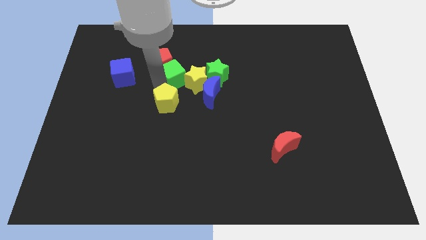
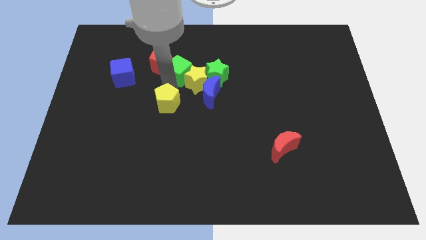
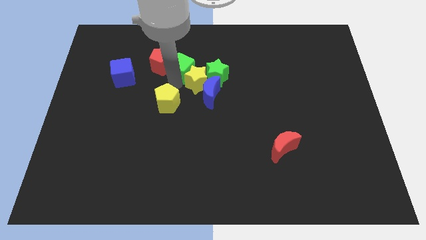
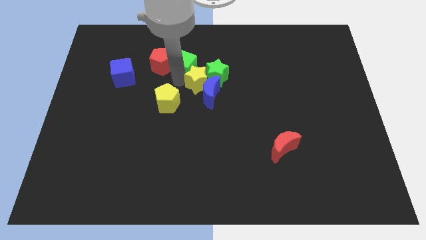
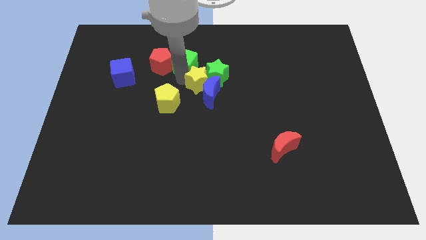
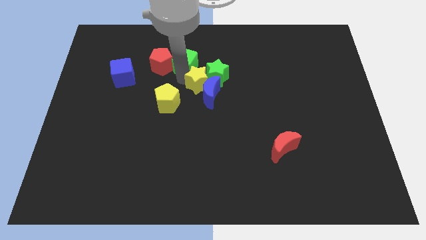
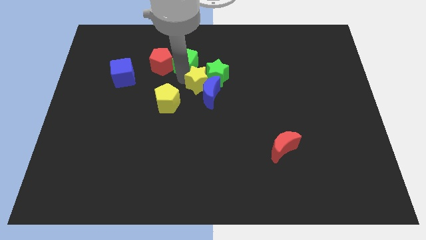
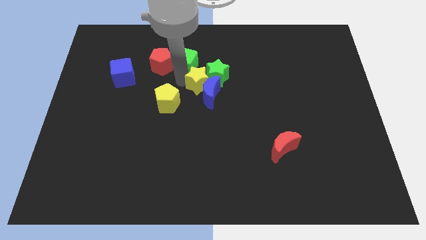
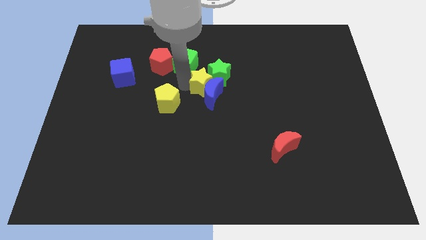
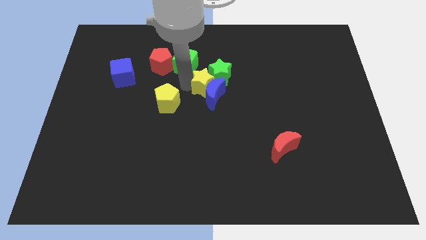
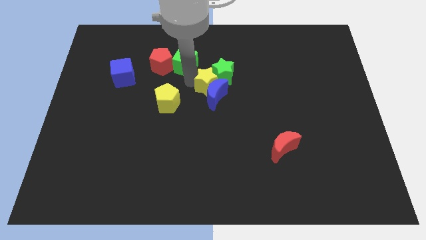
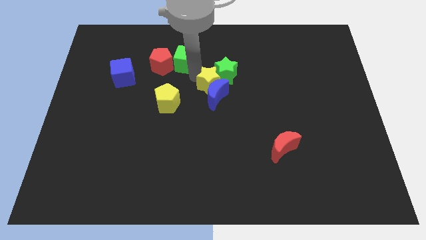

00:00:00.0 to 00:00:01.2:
place the green cube to the right of the red pentagon

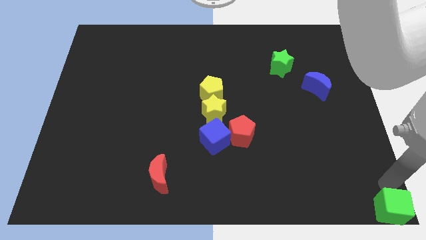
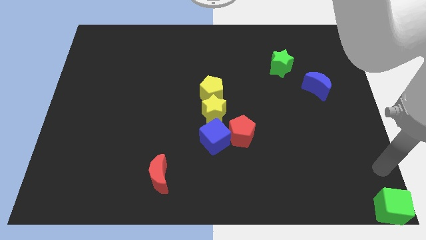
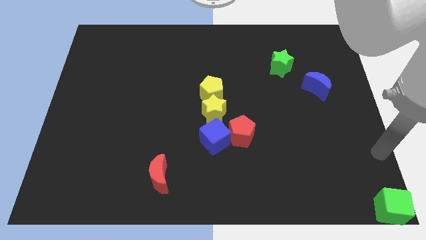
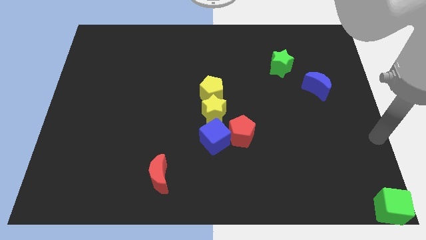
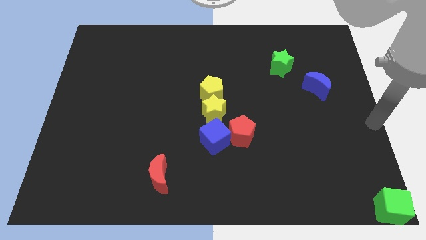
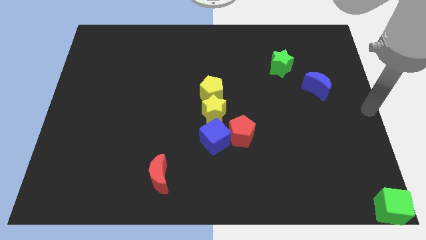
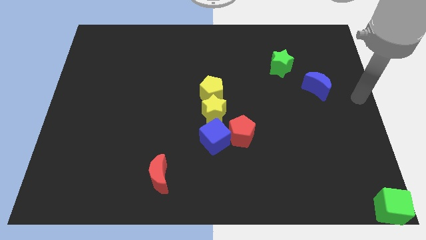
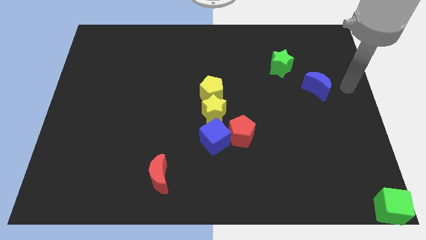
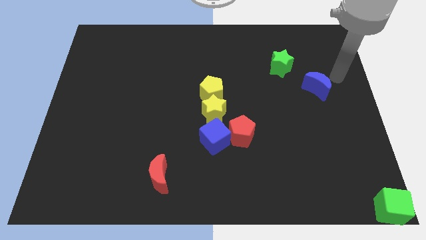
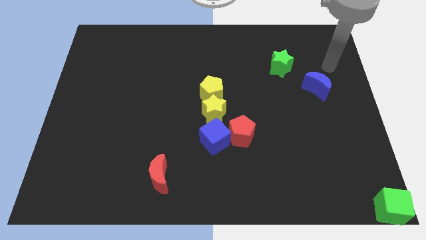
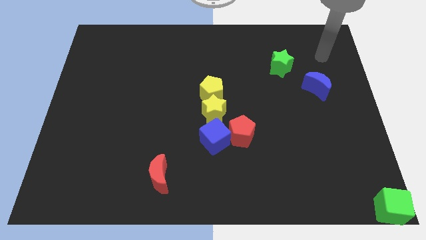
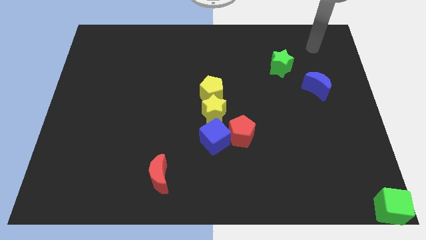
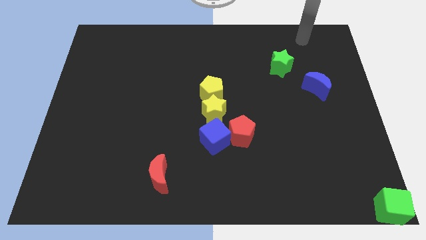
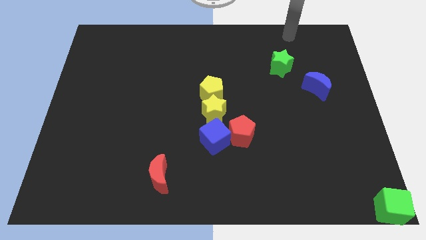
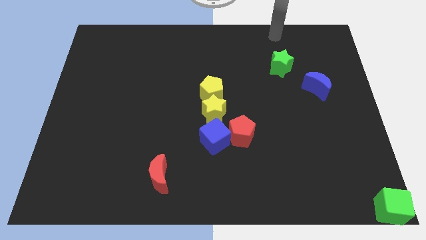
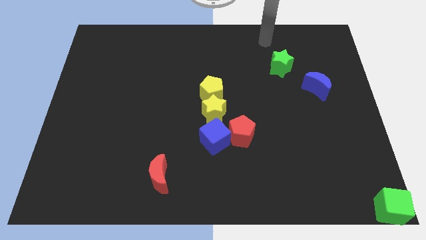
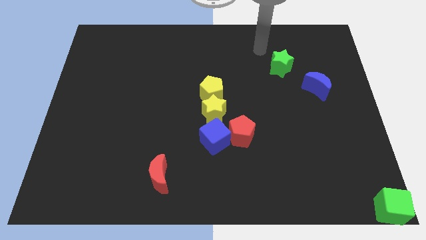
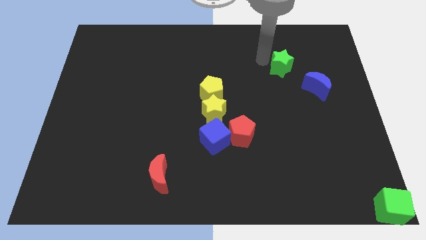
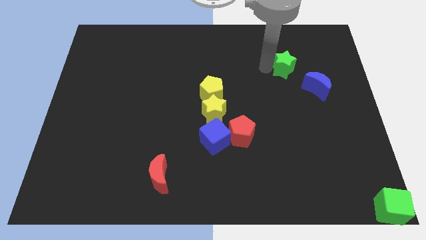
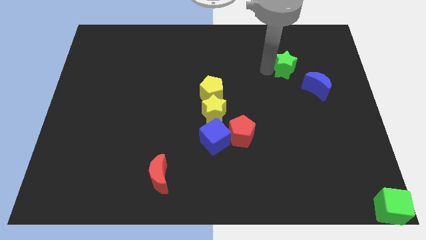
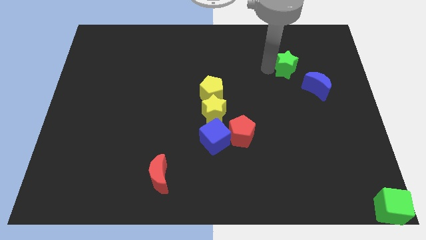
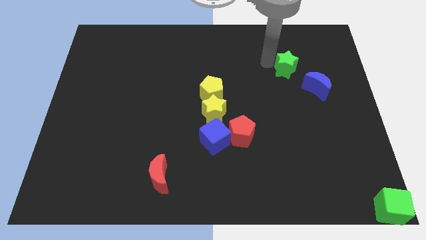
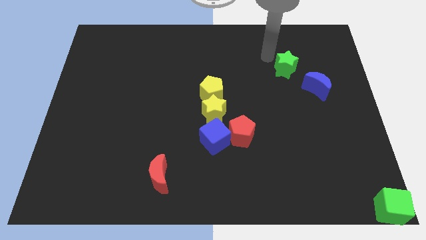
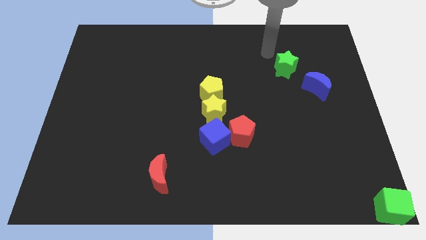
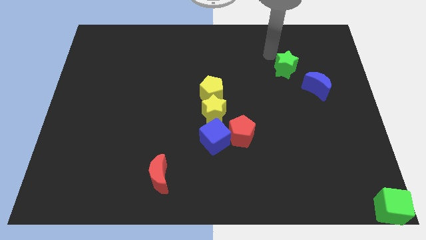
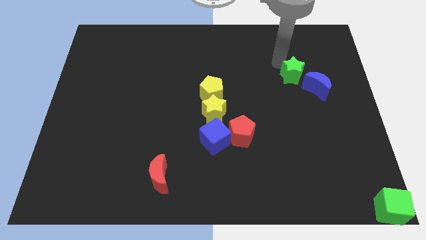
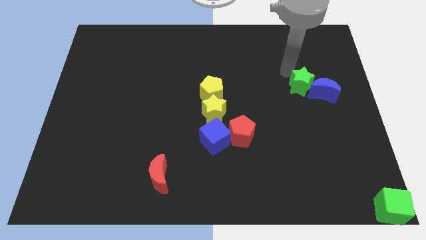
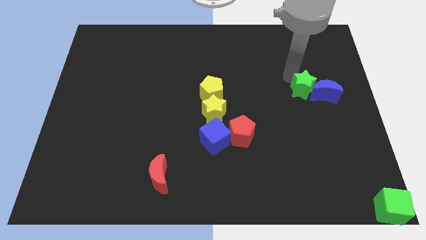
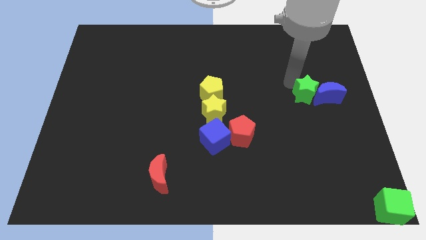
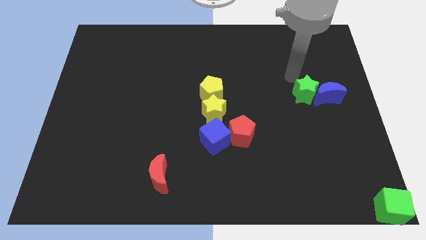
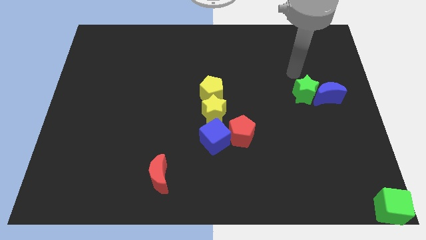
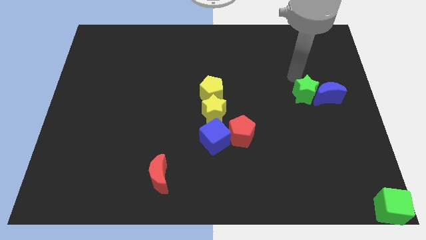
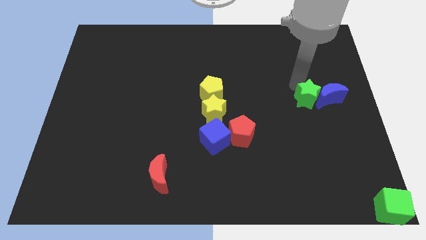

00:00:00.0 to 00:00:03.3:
push the green star into the blue moon

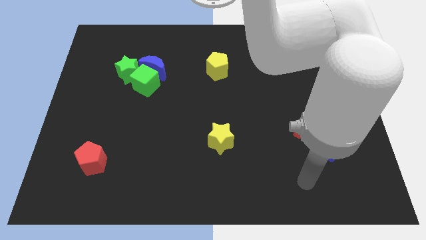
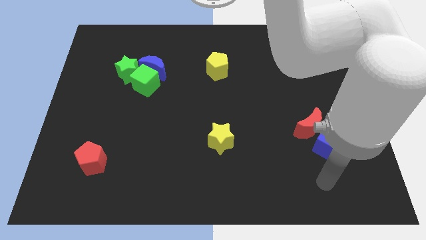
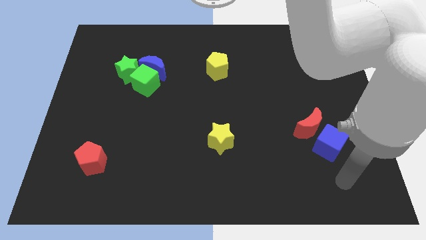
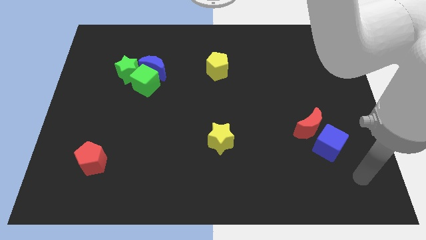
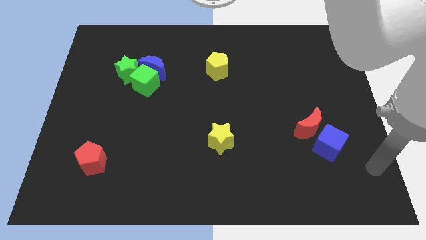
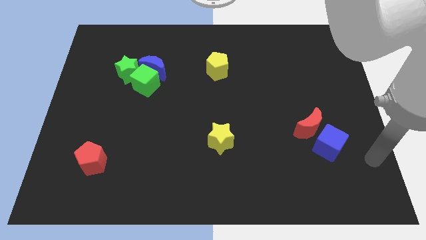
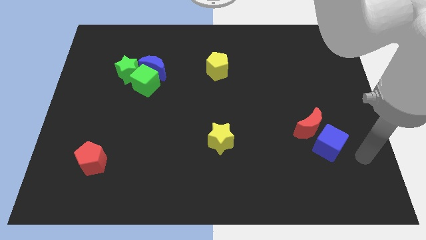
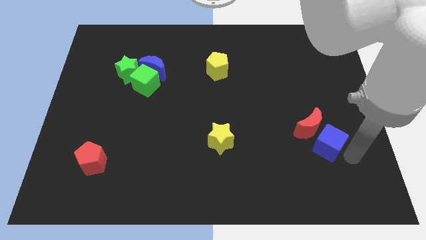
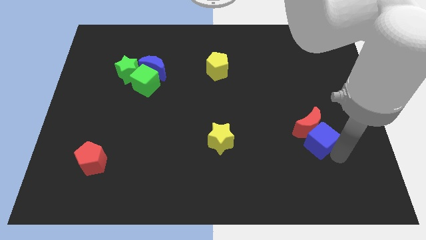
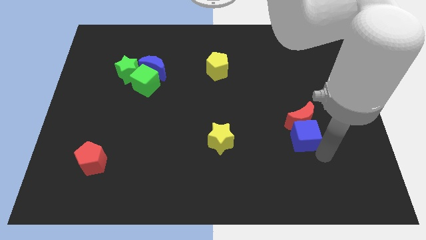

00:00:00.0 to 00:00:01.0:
push the blue cube into the red moon

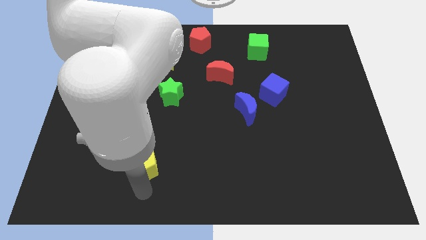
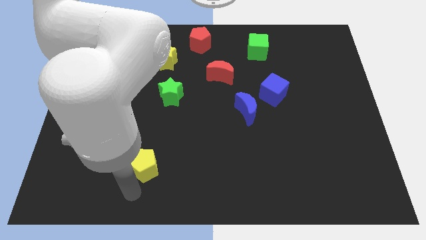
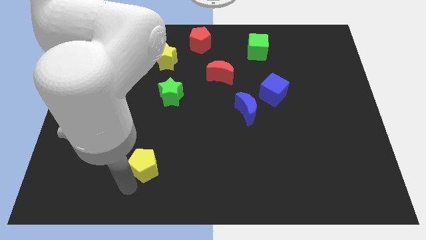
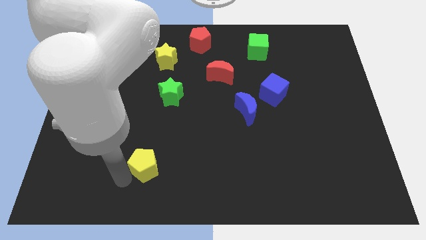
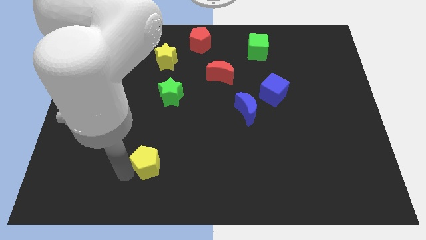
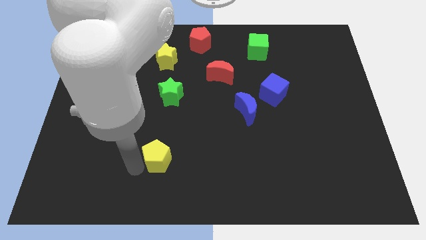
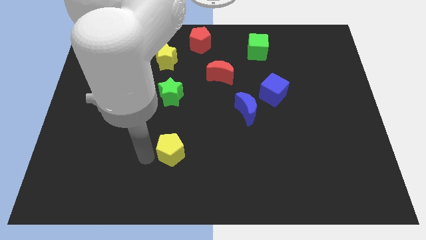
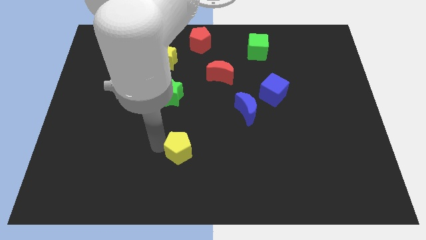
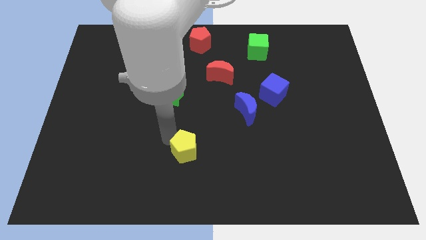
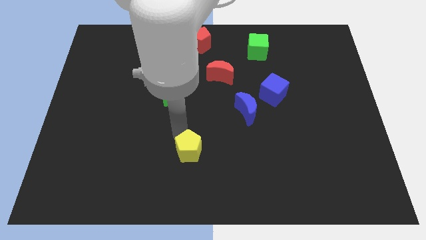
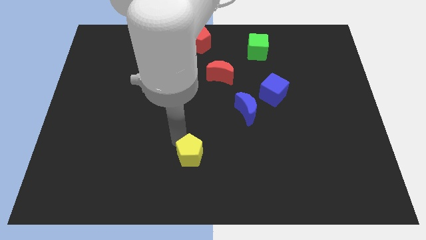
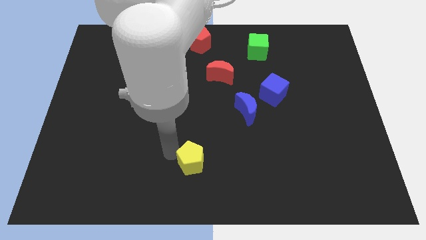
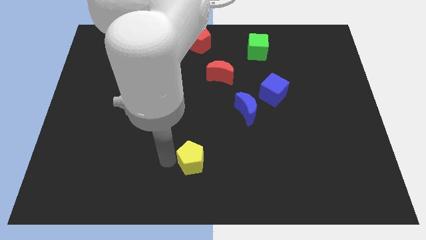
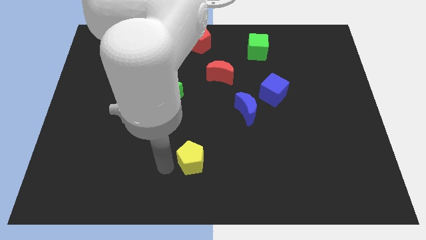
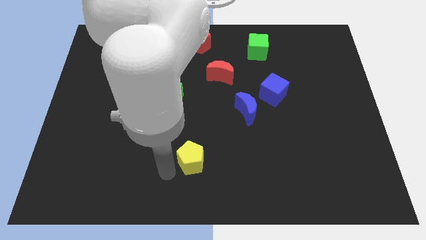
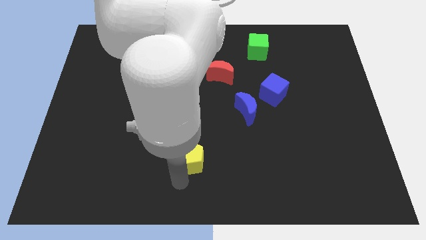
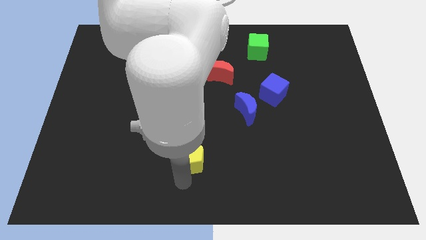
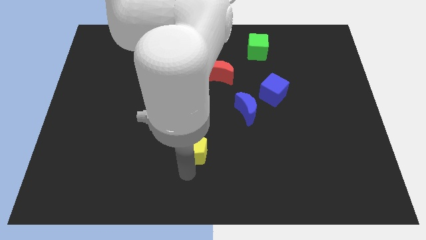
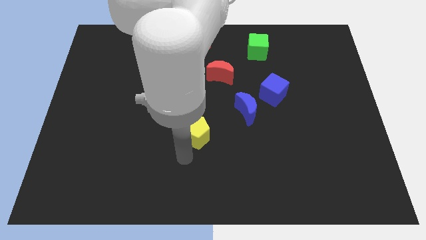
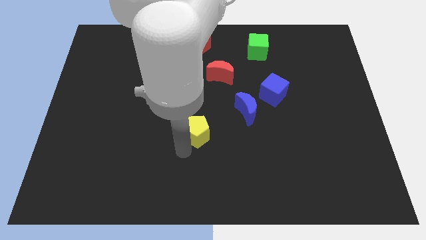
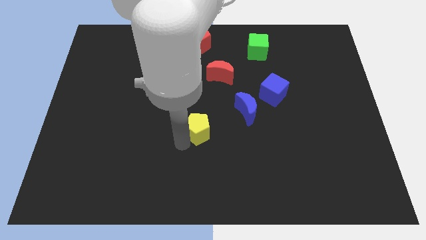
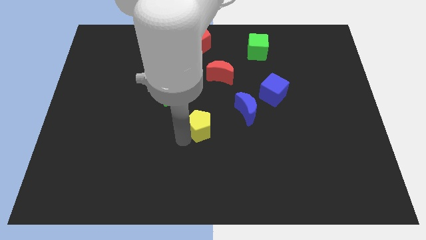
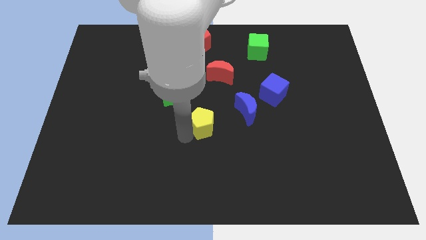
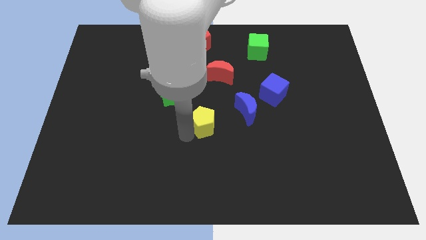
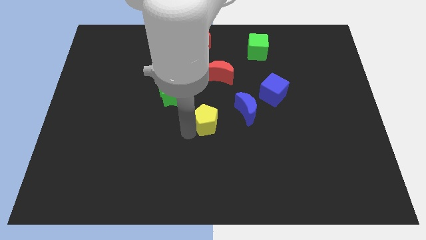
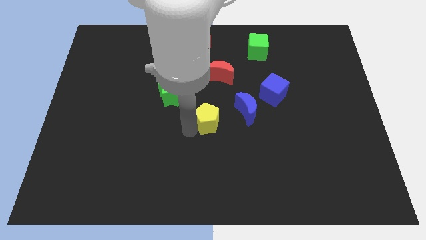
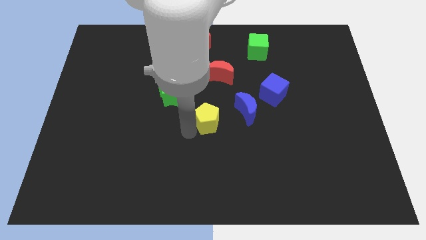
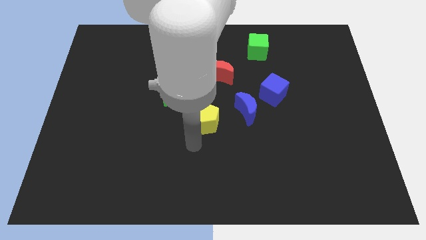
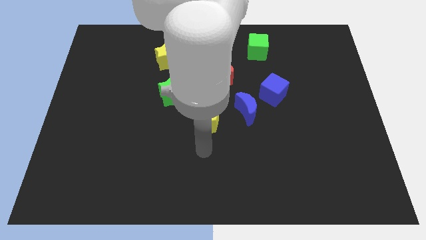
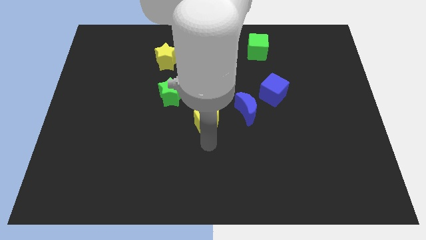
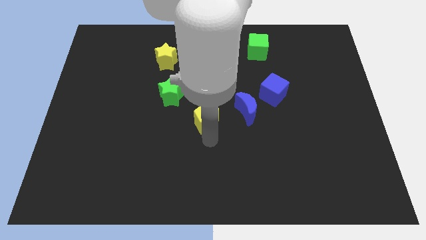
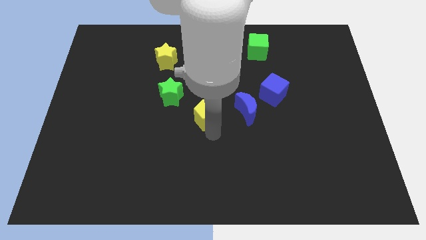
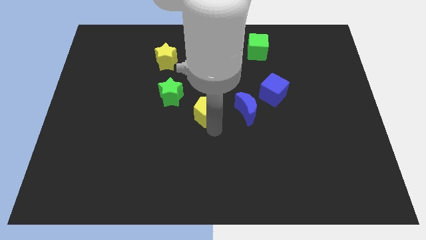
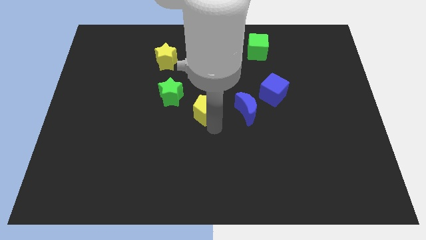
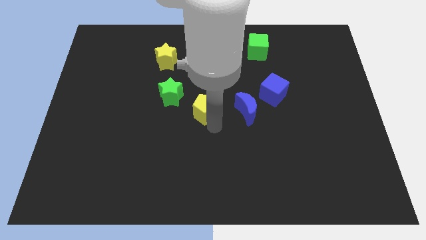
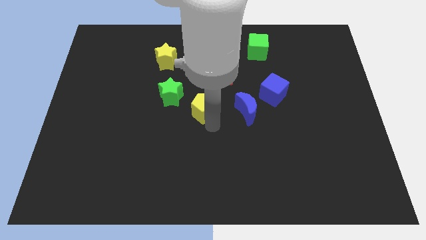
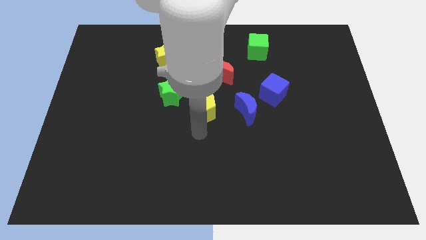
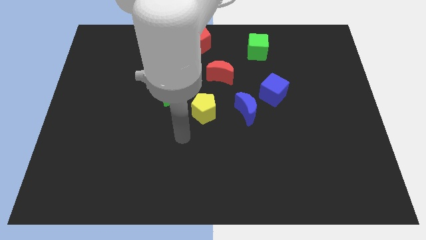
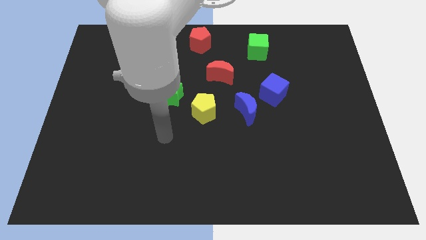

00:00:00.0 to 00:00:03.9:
push the yellow pentagon to the center of the board
